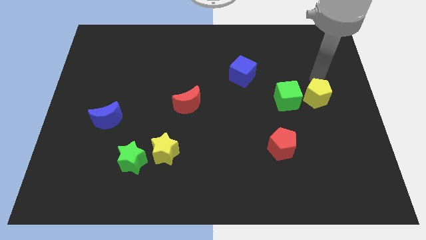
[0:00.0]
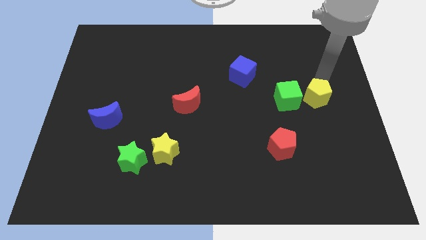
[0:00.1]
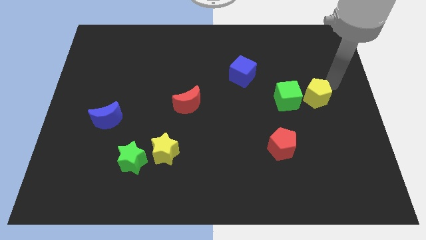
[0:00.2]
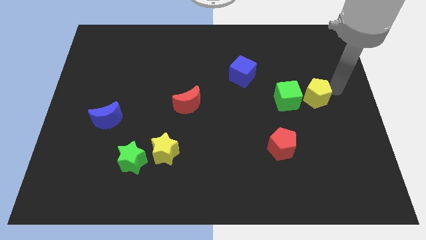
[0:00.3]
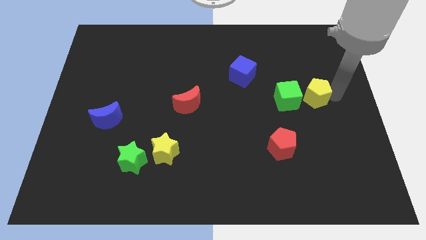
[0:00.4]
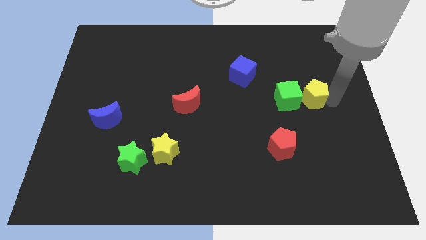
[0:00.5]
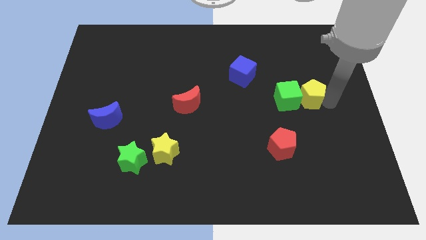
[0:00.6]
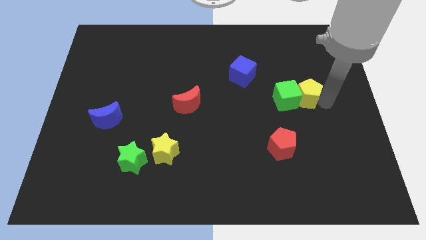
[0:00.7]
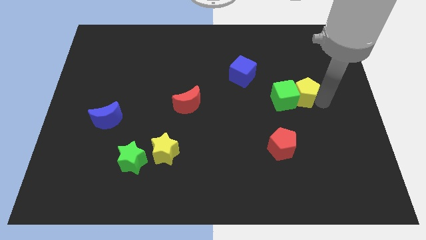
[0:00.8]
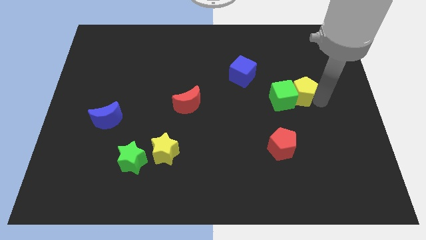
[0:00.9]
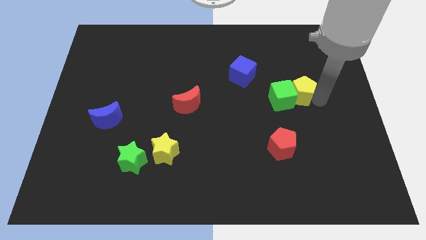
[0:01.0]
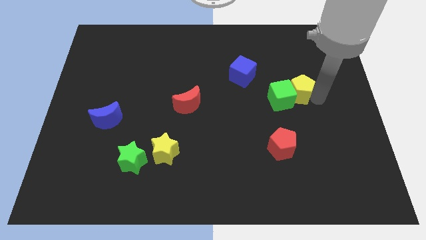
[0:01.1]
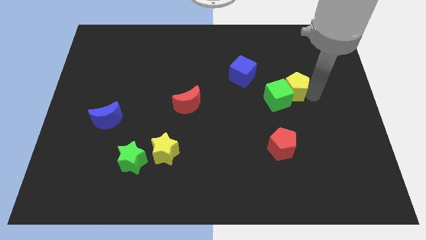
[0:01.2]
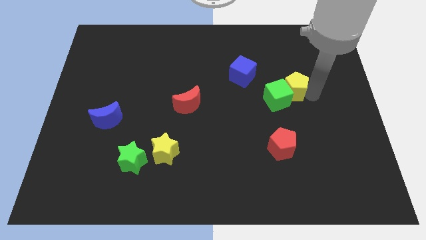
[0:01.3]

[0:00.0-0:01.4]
push yellow pentagon in to green start

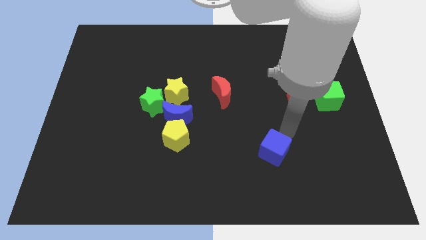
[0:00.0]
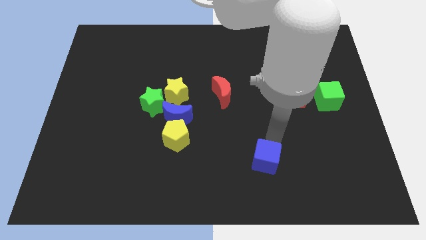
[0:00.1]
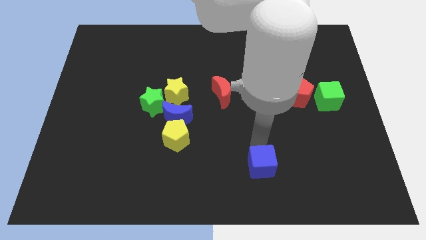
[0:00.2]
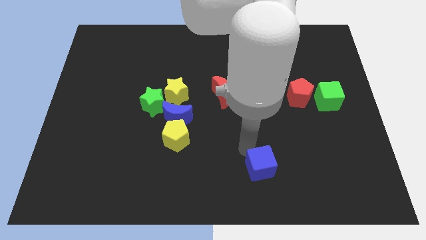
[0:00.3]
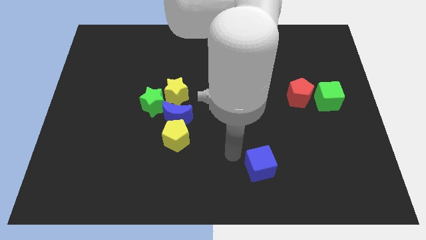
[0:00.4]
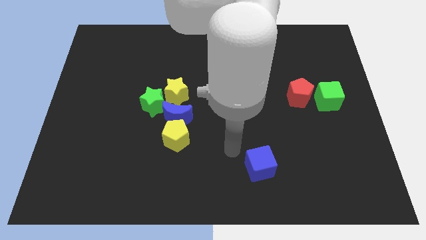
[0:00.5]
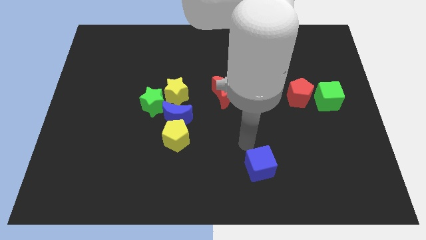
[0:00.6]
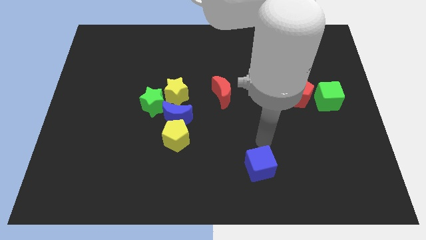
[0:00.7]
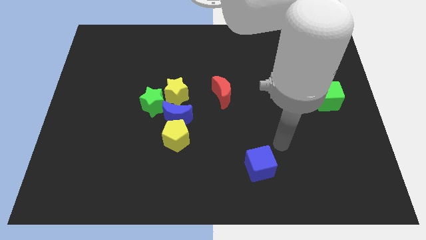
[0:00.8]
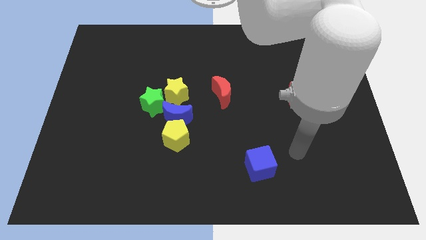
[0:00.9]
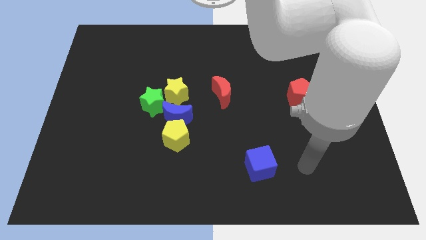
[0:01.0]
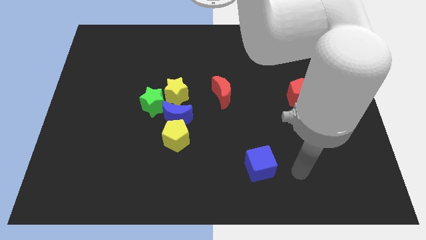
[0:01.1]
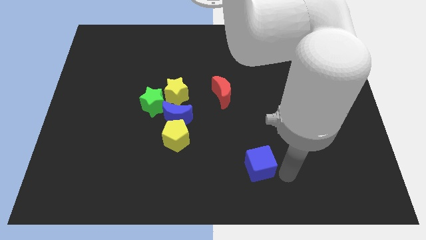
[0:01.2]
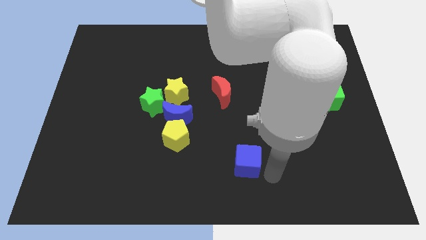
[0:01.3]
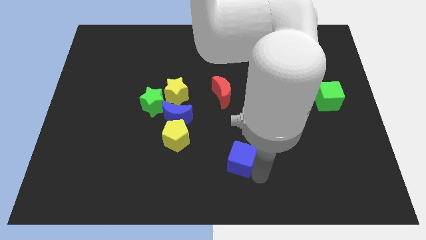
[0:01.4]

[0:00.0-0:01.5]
push the blue cube at bottom center

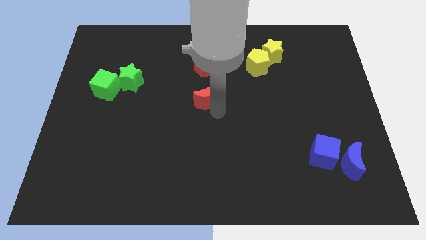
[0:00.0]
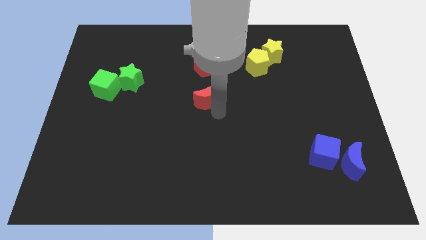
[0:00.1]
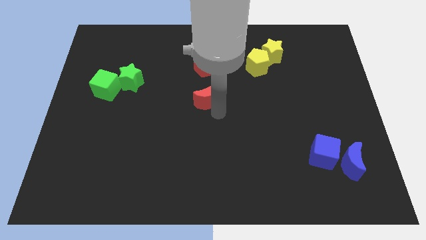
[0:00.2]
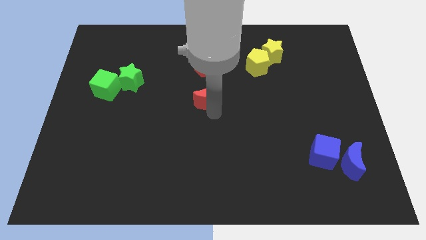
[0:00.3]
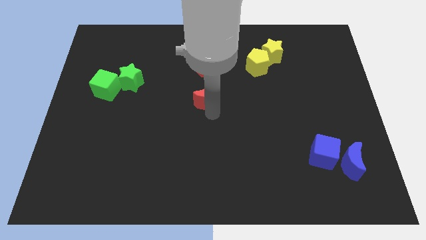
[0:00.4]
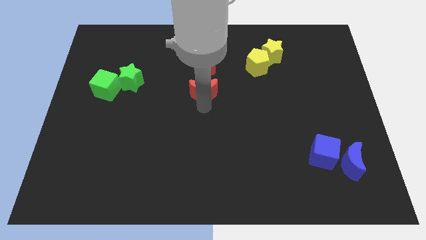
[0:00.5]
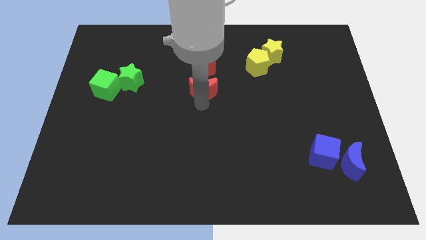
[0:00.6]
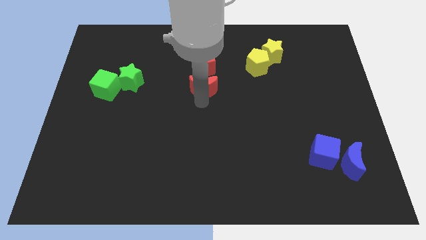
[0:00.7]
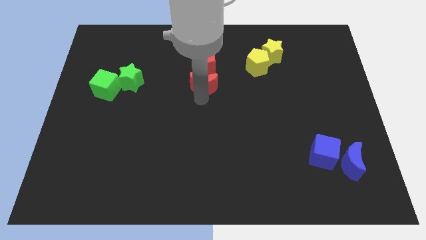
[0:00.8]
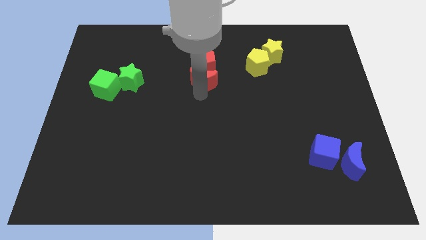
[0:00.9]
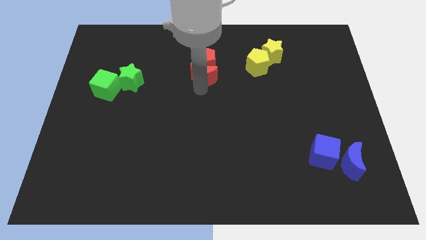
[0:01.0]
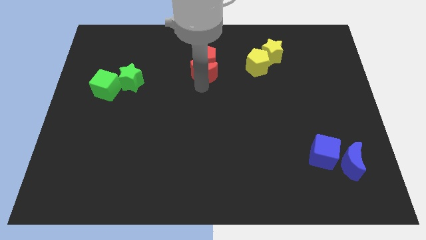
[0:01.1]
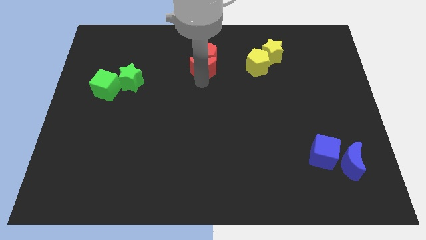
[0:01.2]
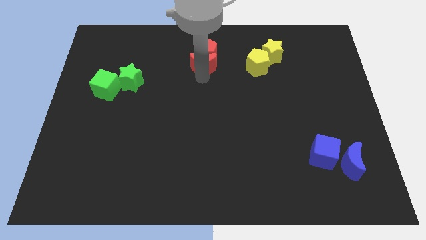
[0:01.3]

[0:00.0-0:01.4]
push red moon into the red pentagon

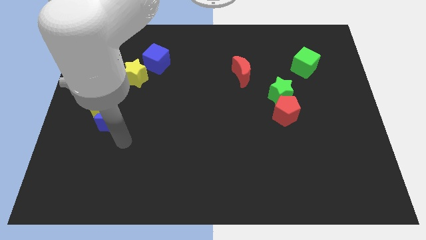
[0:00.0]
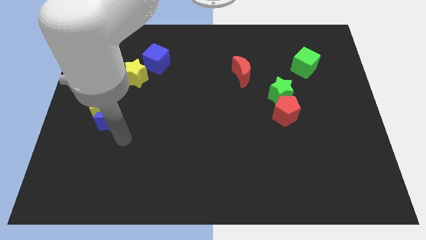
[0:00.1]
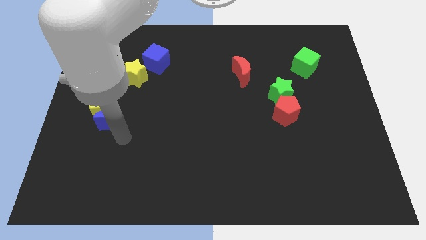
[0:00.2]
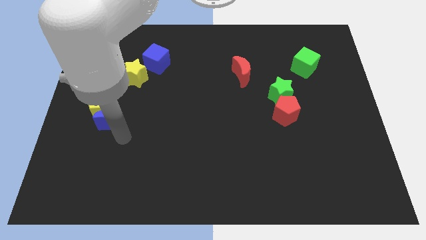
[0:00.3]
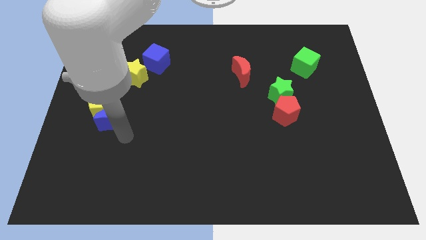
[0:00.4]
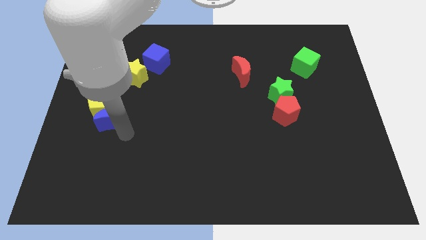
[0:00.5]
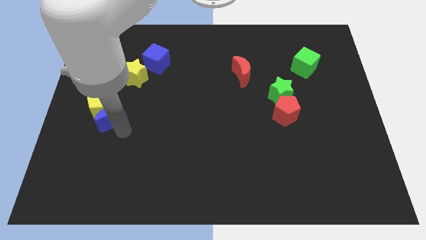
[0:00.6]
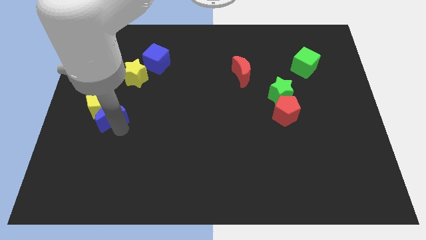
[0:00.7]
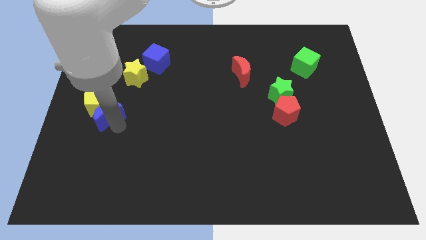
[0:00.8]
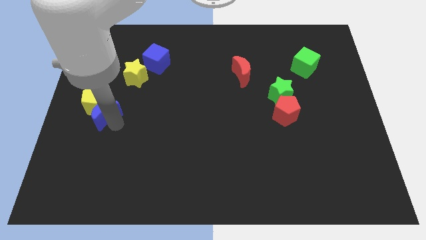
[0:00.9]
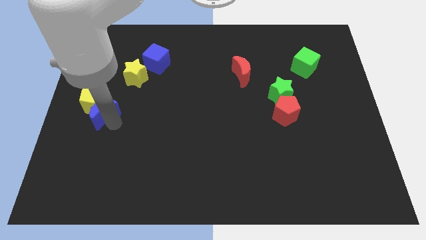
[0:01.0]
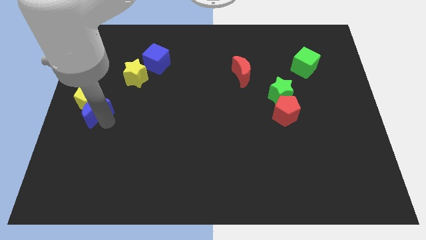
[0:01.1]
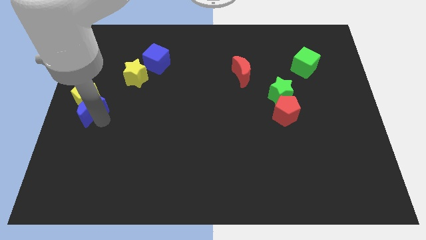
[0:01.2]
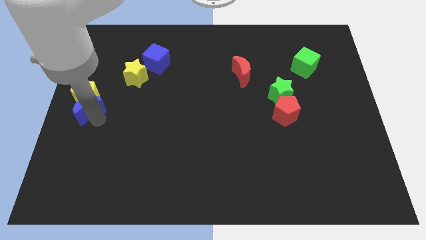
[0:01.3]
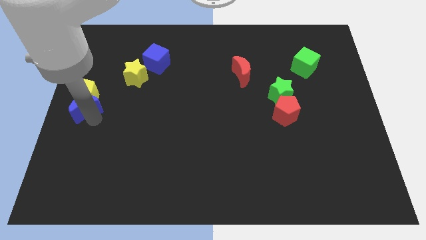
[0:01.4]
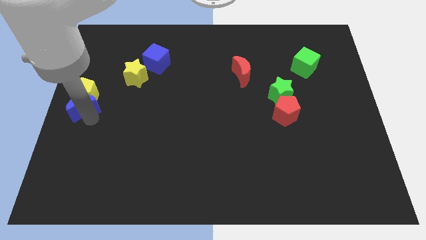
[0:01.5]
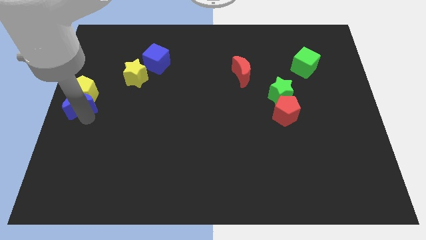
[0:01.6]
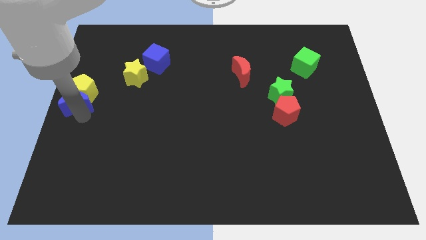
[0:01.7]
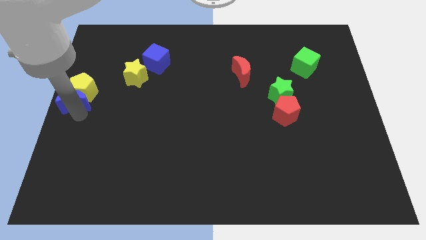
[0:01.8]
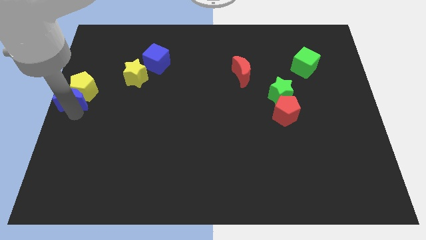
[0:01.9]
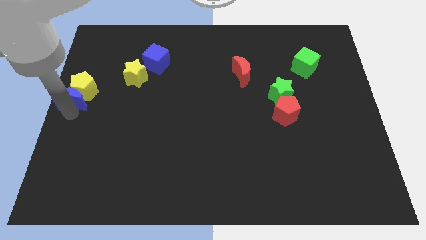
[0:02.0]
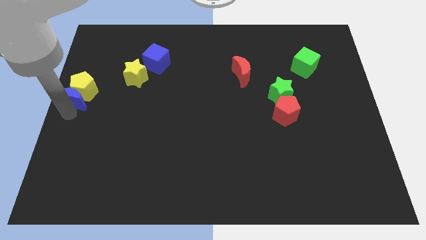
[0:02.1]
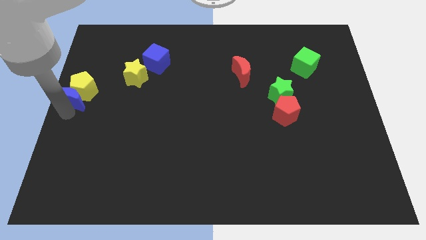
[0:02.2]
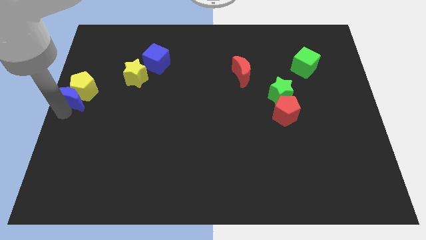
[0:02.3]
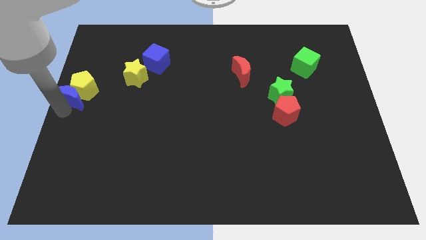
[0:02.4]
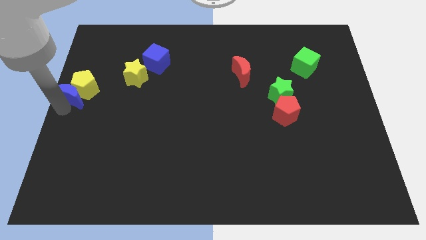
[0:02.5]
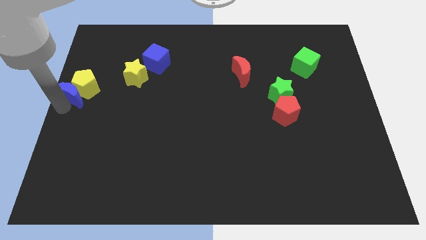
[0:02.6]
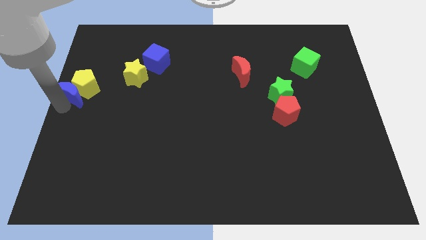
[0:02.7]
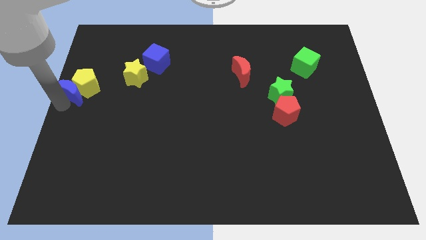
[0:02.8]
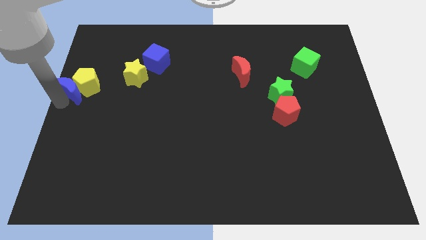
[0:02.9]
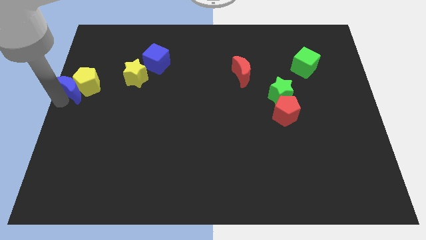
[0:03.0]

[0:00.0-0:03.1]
move the blue moon and yellow pentagon towards the top side

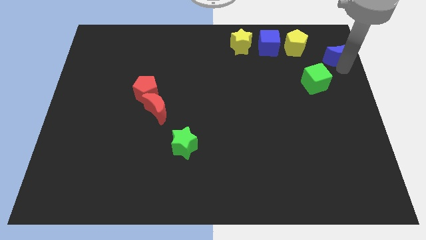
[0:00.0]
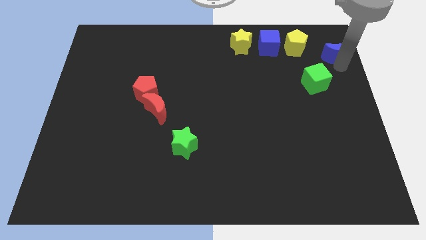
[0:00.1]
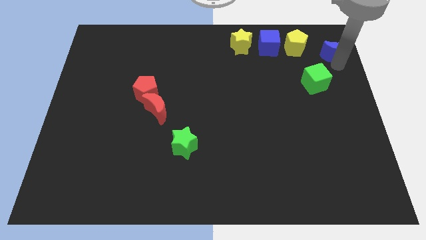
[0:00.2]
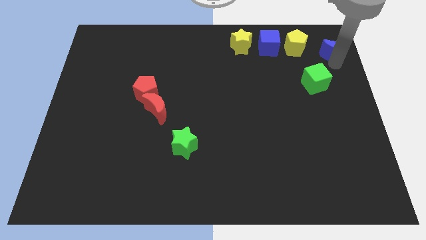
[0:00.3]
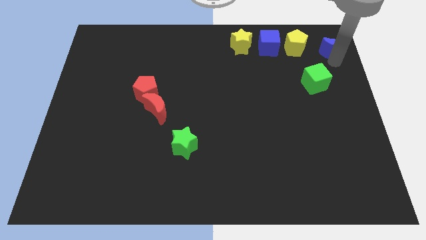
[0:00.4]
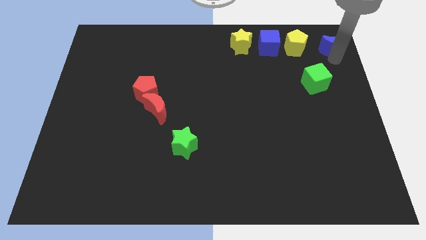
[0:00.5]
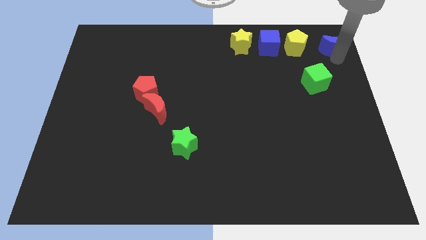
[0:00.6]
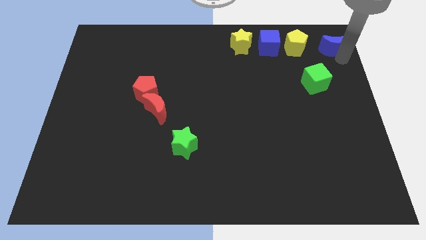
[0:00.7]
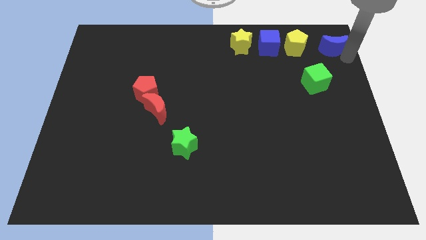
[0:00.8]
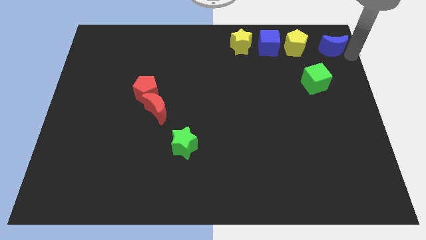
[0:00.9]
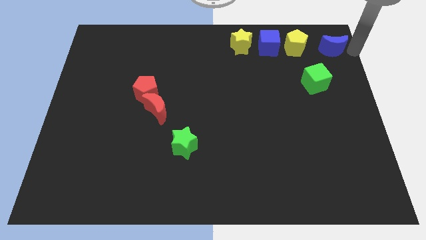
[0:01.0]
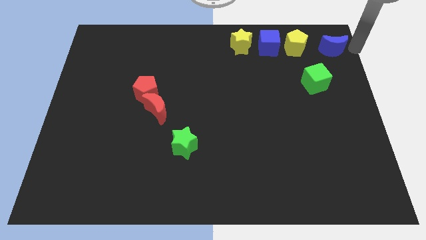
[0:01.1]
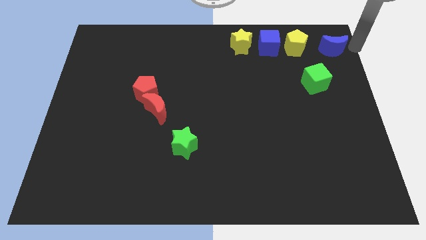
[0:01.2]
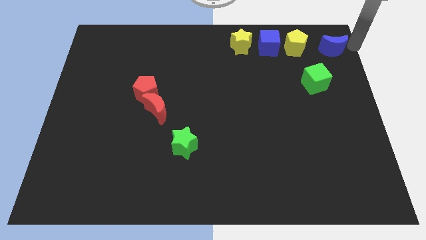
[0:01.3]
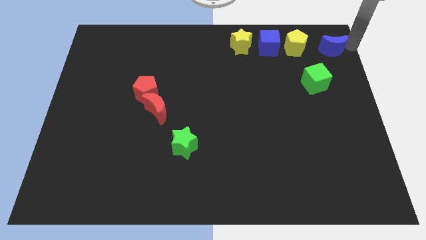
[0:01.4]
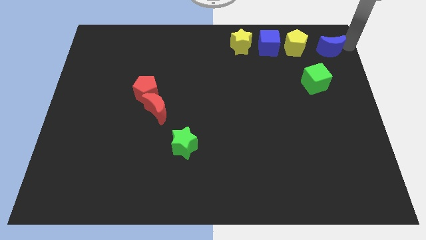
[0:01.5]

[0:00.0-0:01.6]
push the blue moon right to the yellow pentagon
